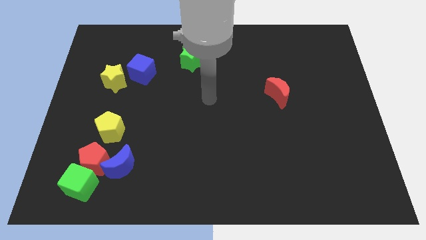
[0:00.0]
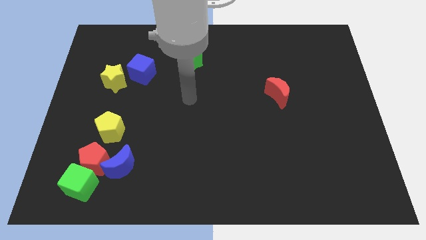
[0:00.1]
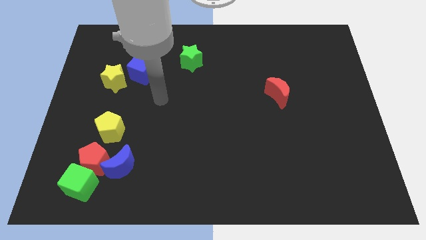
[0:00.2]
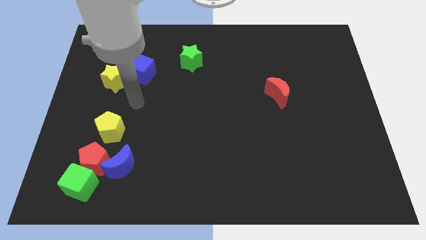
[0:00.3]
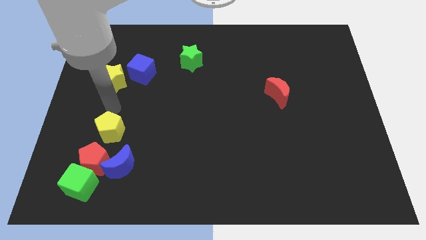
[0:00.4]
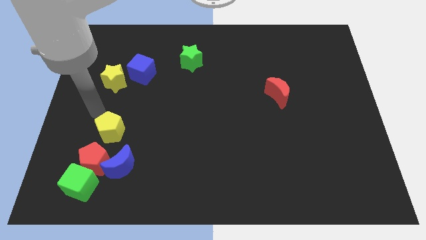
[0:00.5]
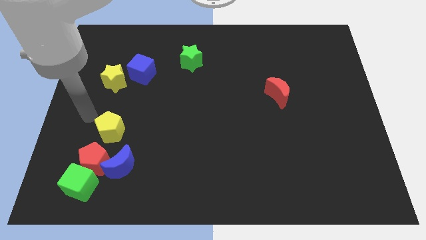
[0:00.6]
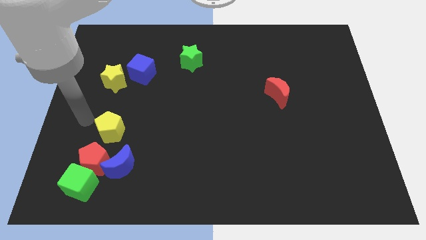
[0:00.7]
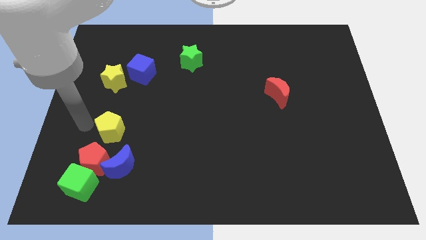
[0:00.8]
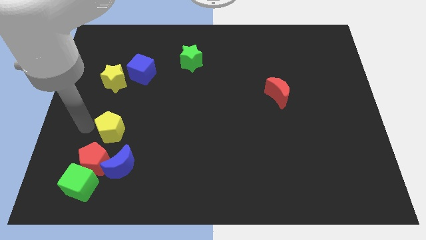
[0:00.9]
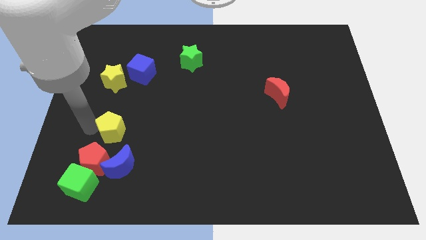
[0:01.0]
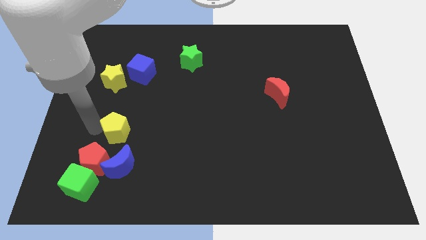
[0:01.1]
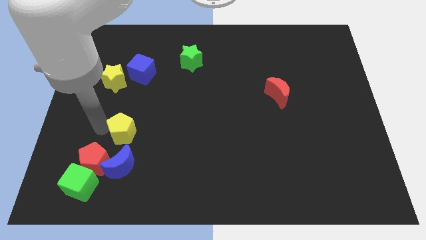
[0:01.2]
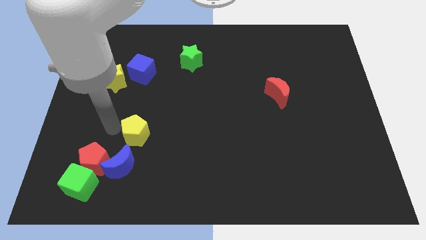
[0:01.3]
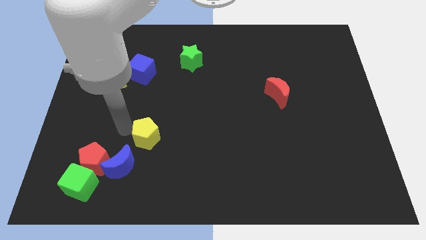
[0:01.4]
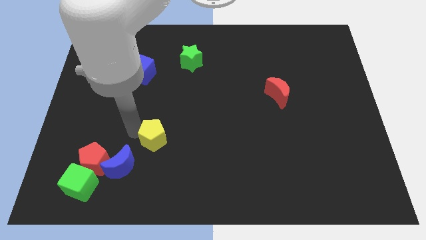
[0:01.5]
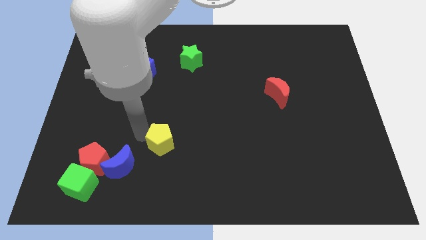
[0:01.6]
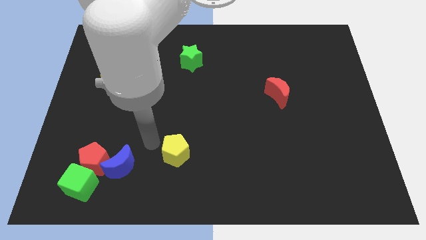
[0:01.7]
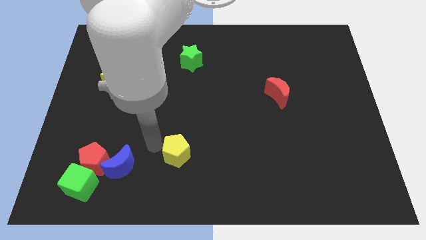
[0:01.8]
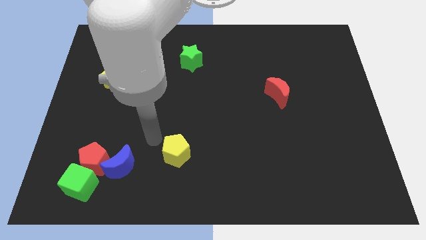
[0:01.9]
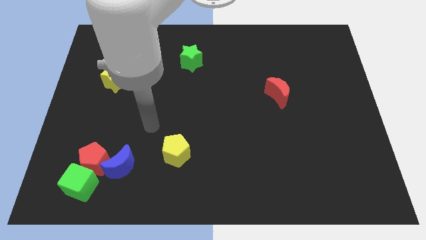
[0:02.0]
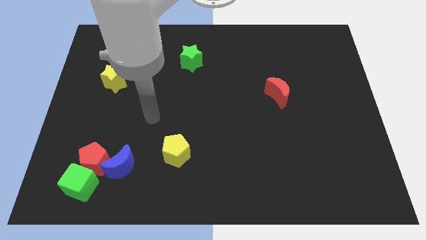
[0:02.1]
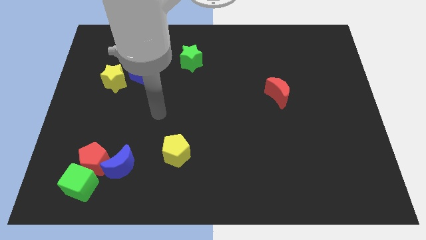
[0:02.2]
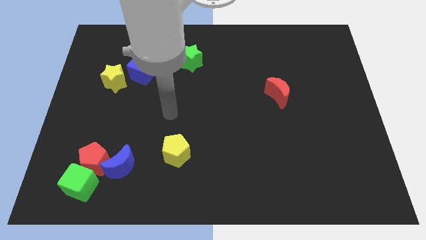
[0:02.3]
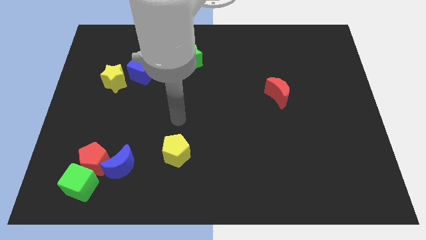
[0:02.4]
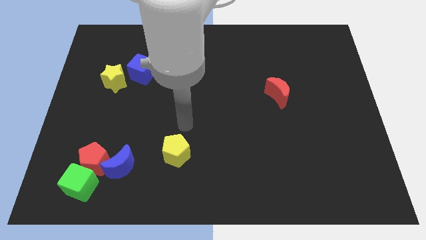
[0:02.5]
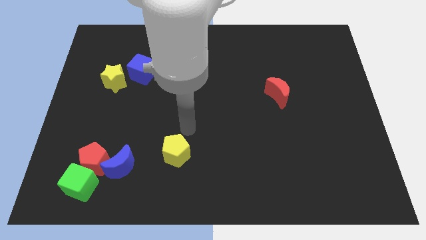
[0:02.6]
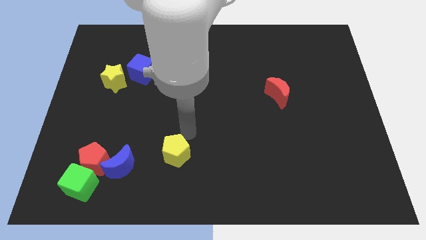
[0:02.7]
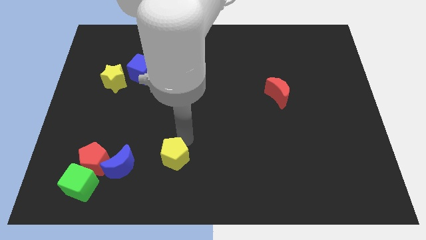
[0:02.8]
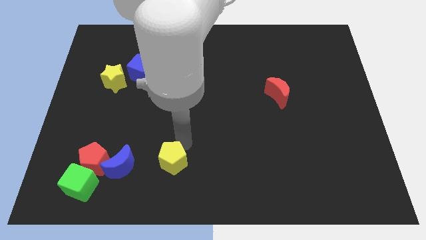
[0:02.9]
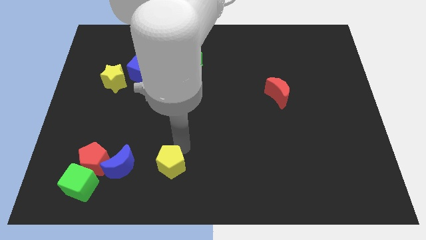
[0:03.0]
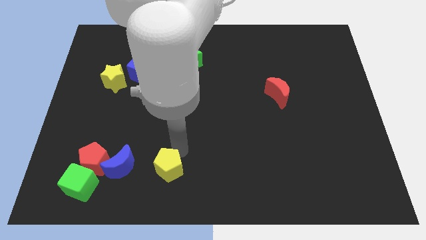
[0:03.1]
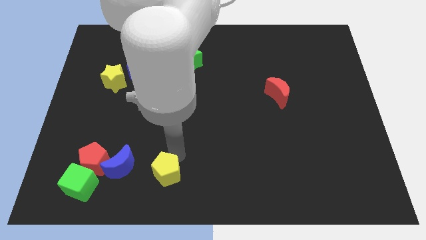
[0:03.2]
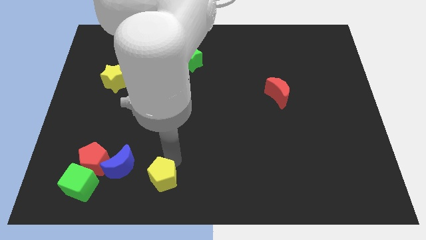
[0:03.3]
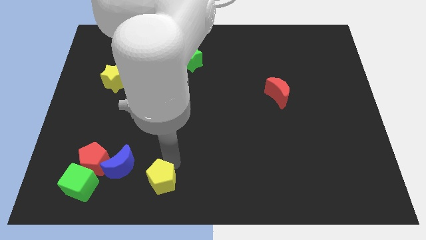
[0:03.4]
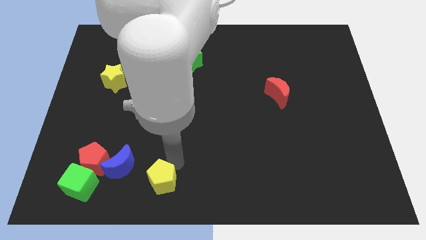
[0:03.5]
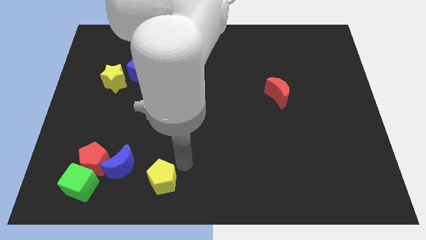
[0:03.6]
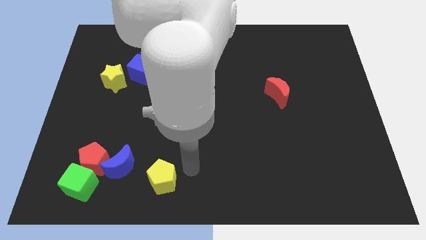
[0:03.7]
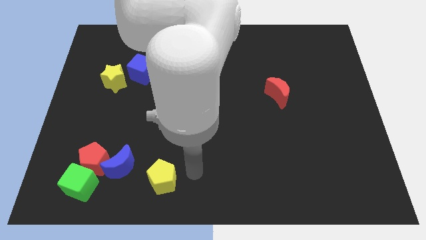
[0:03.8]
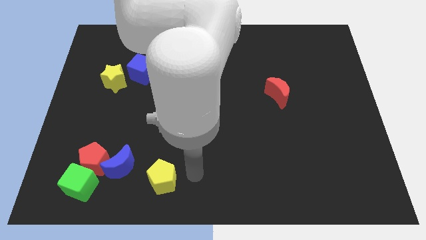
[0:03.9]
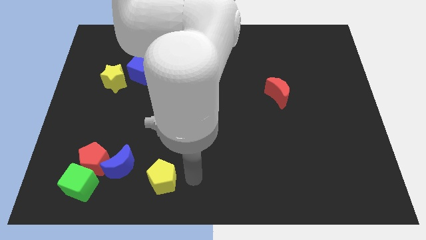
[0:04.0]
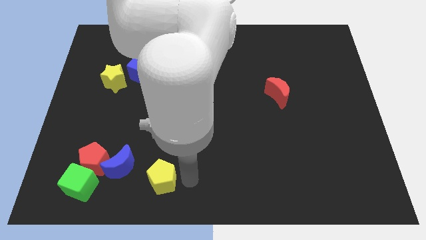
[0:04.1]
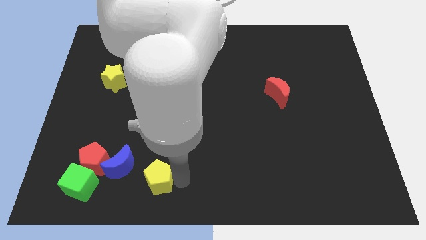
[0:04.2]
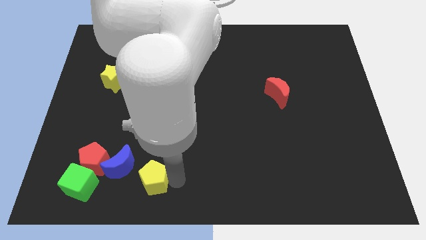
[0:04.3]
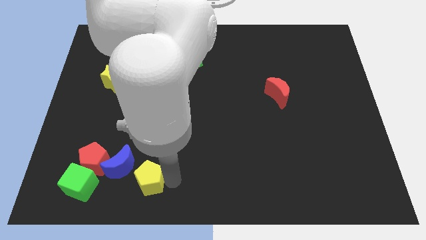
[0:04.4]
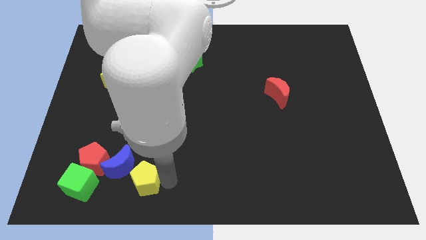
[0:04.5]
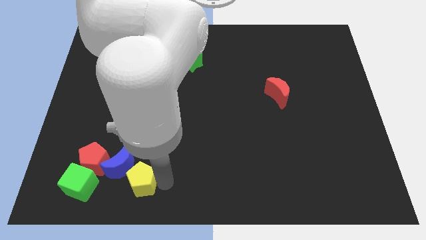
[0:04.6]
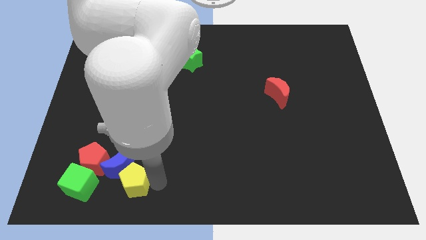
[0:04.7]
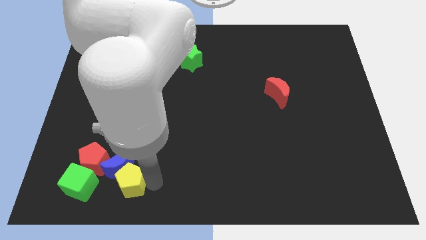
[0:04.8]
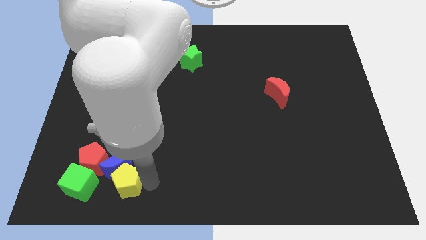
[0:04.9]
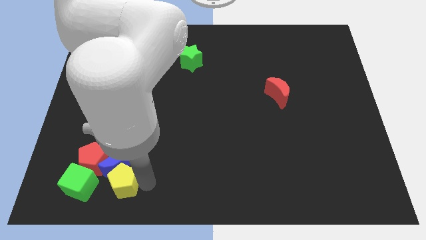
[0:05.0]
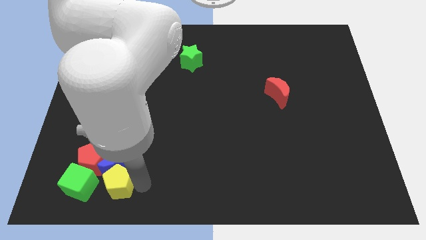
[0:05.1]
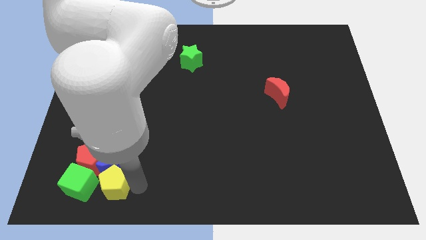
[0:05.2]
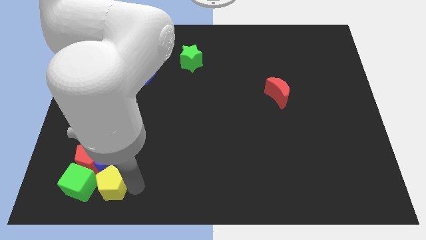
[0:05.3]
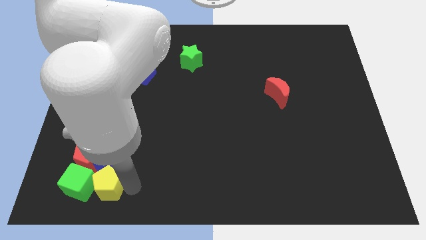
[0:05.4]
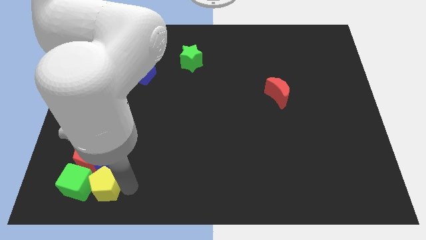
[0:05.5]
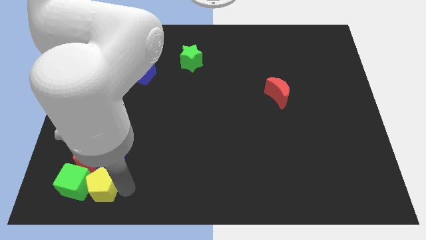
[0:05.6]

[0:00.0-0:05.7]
move the yellow pentagon next to the green cube

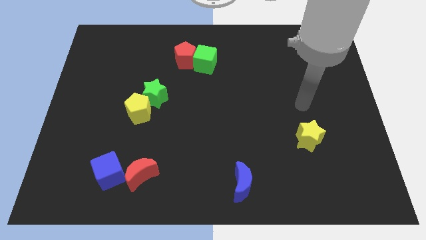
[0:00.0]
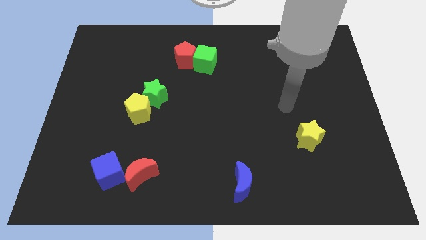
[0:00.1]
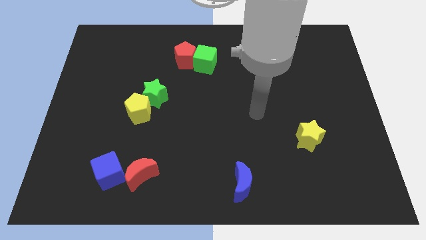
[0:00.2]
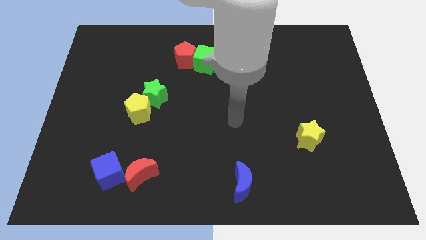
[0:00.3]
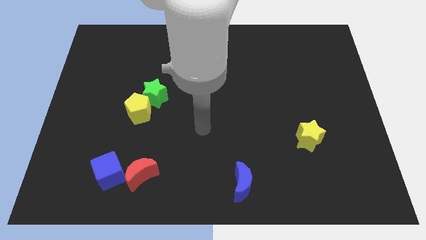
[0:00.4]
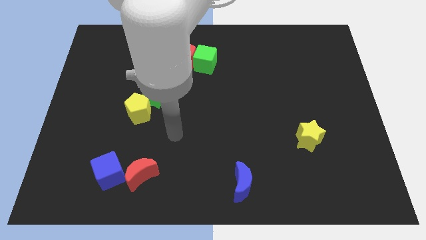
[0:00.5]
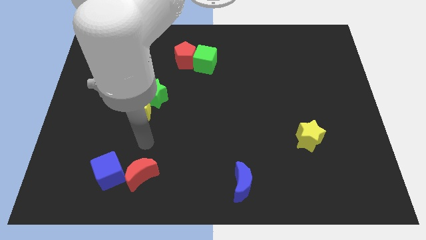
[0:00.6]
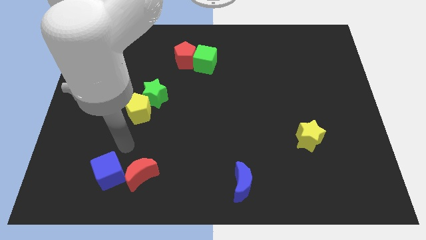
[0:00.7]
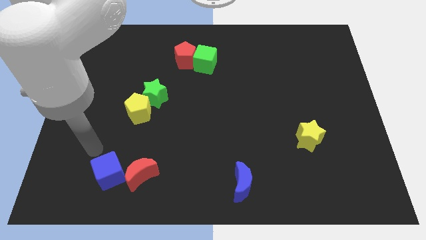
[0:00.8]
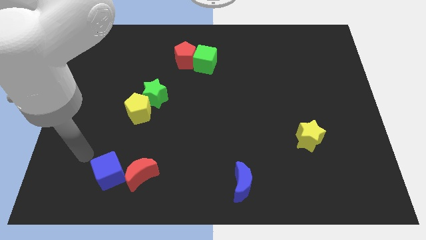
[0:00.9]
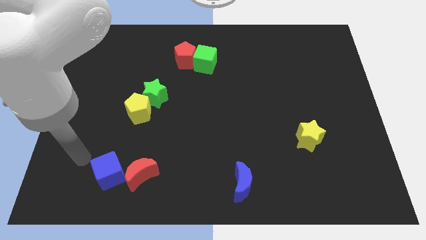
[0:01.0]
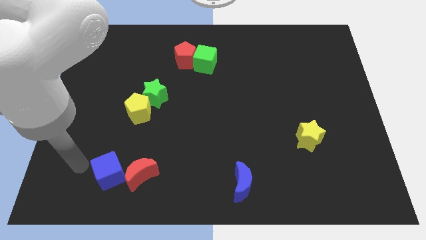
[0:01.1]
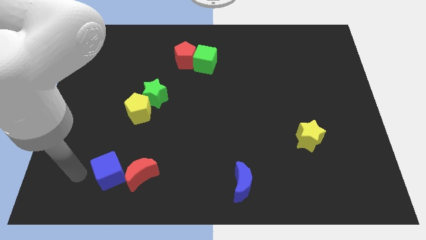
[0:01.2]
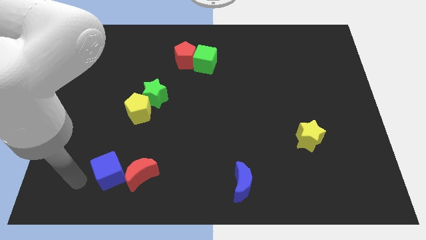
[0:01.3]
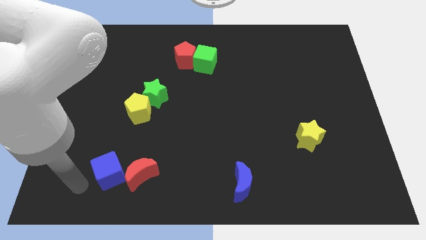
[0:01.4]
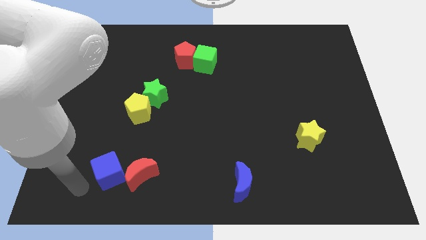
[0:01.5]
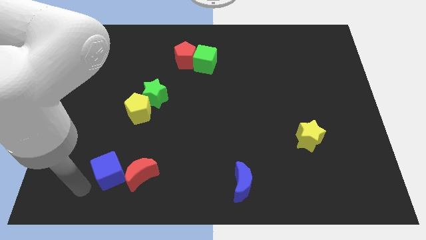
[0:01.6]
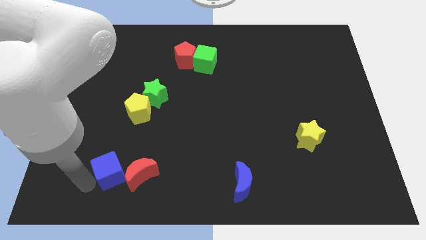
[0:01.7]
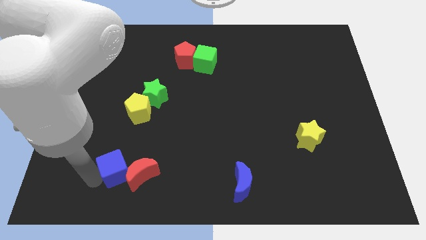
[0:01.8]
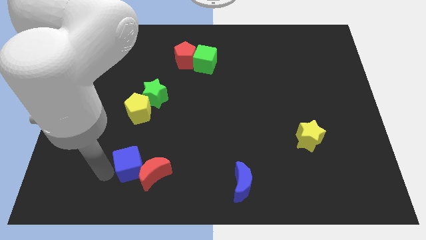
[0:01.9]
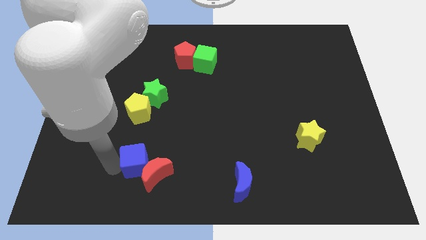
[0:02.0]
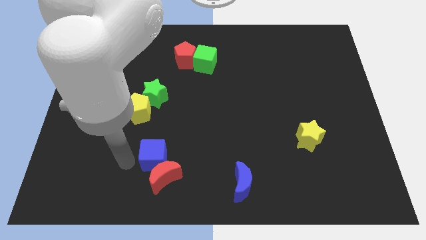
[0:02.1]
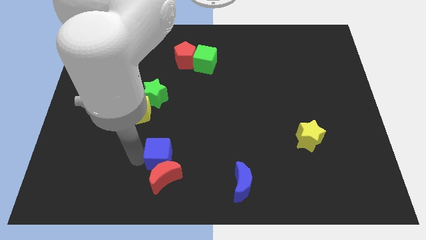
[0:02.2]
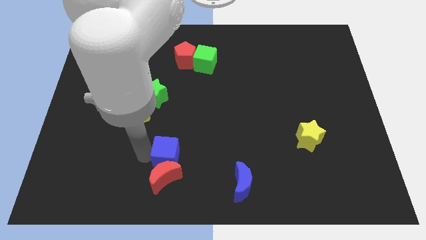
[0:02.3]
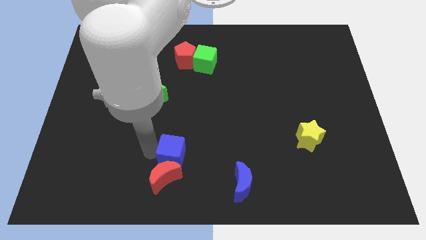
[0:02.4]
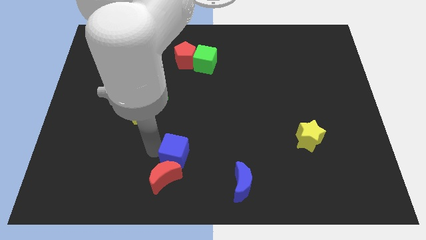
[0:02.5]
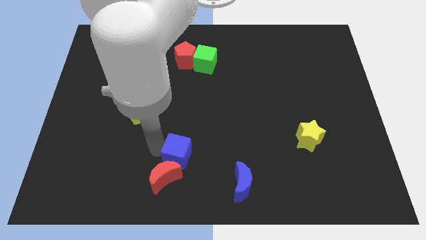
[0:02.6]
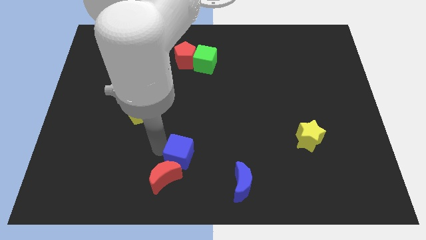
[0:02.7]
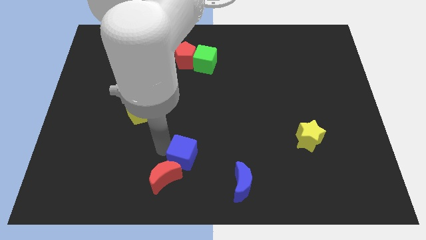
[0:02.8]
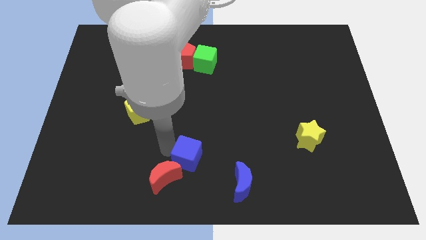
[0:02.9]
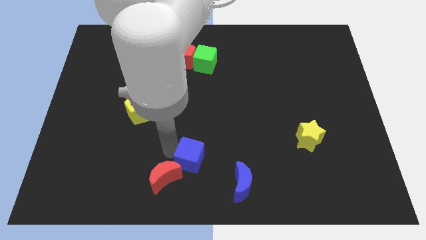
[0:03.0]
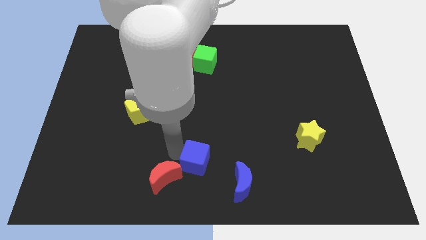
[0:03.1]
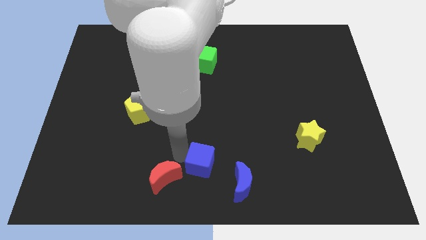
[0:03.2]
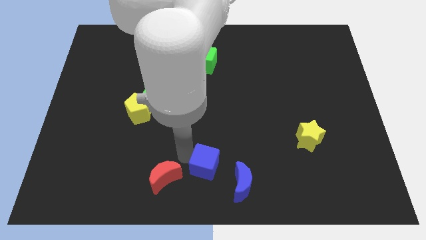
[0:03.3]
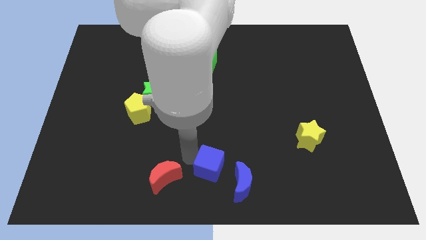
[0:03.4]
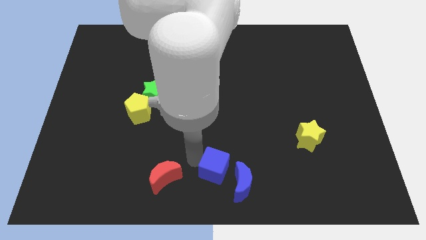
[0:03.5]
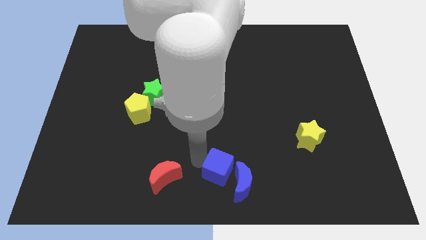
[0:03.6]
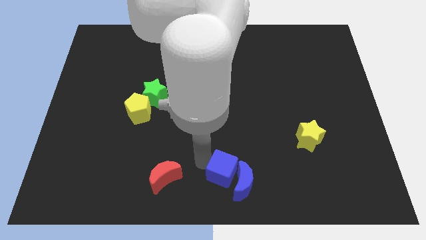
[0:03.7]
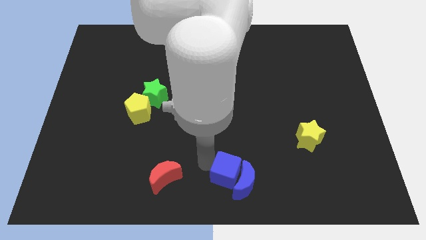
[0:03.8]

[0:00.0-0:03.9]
put the blue cube next to the blue moon
